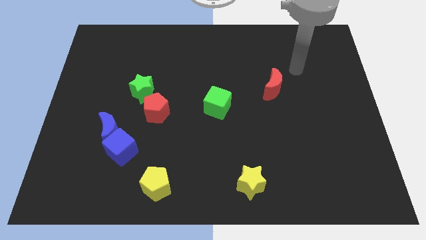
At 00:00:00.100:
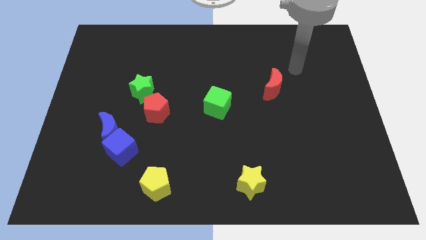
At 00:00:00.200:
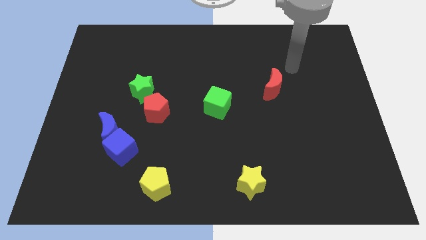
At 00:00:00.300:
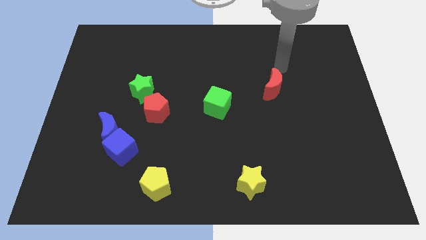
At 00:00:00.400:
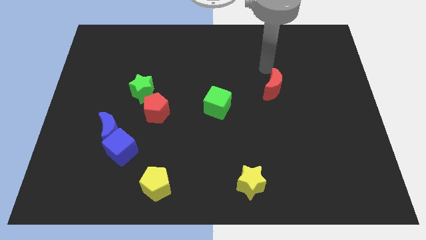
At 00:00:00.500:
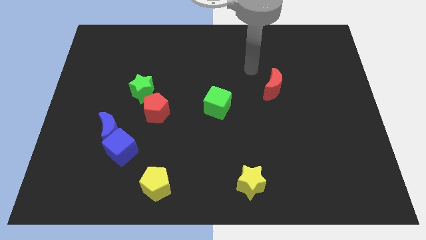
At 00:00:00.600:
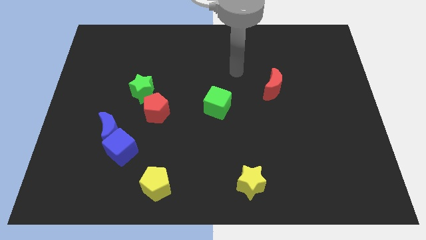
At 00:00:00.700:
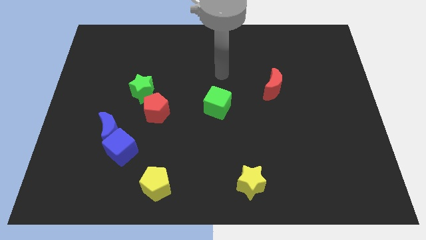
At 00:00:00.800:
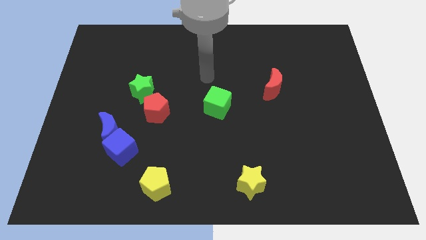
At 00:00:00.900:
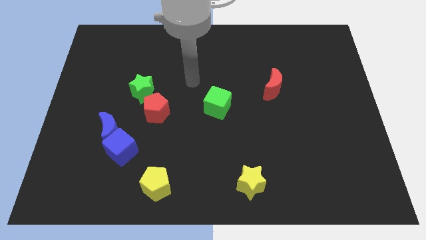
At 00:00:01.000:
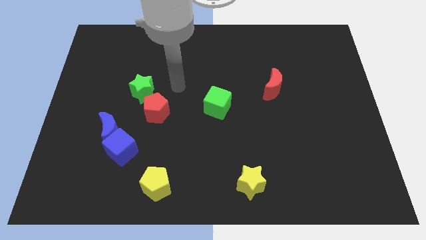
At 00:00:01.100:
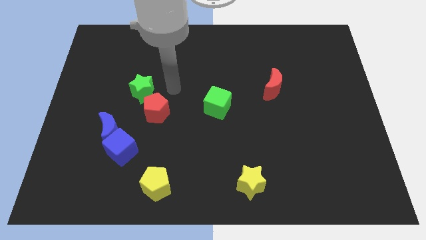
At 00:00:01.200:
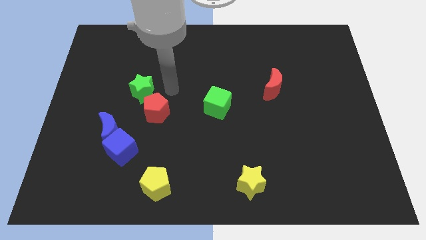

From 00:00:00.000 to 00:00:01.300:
move your hand towards center left

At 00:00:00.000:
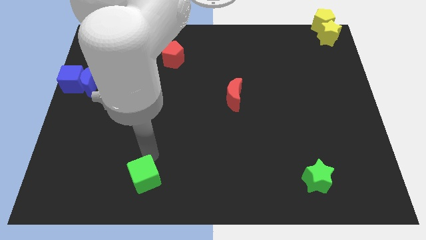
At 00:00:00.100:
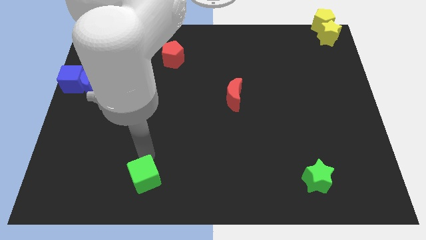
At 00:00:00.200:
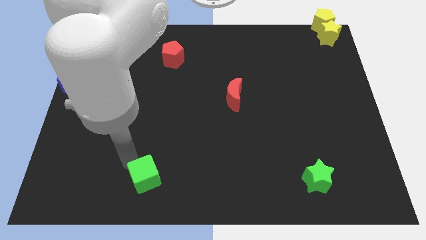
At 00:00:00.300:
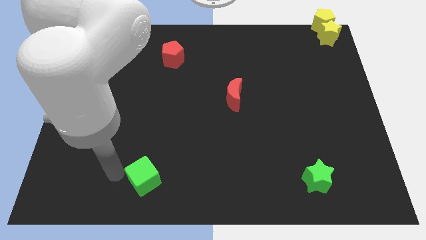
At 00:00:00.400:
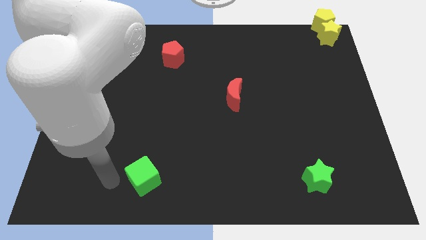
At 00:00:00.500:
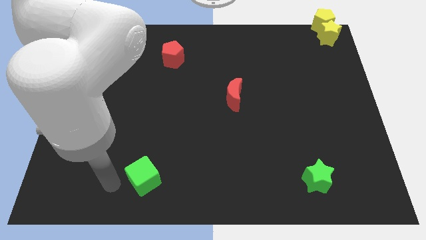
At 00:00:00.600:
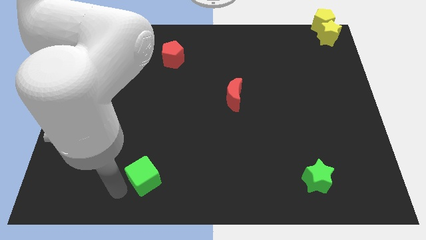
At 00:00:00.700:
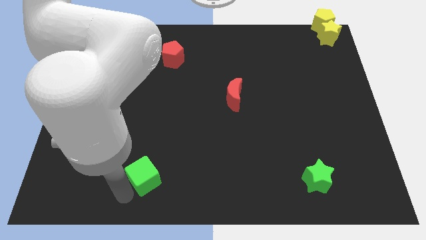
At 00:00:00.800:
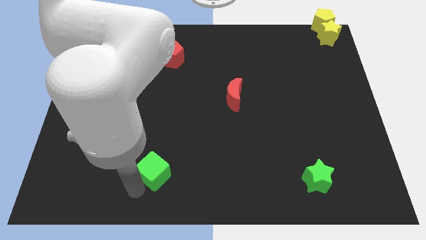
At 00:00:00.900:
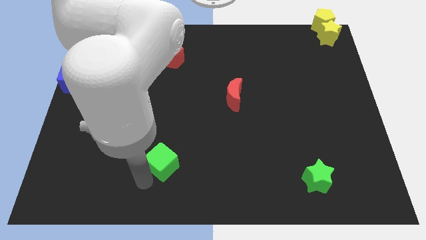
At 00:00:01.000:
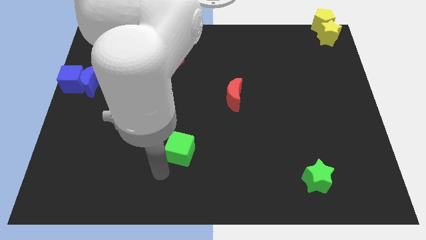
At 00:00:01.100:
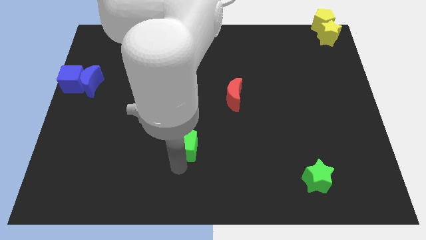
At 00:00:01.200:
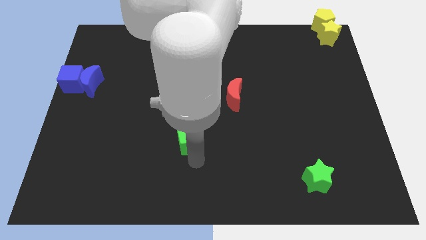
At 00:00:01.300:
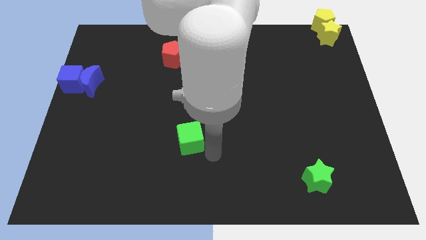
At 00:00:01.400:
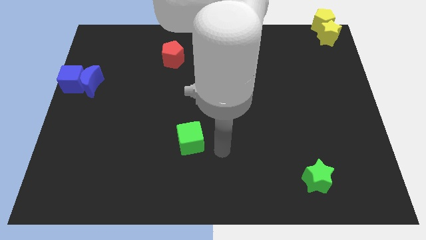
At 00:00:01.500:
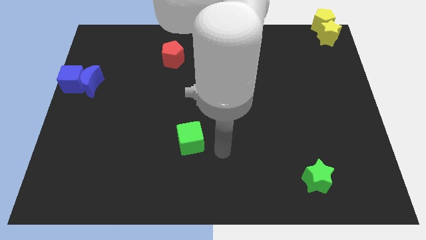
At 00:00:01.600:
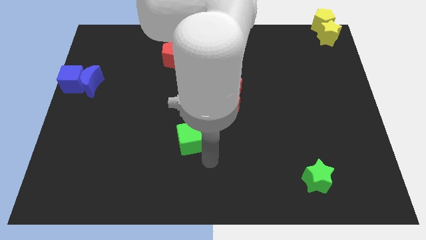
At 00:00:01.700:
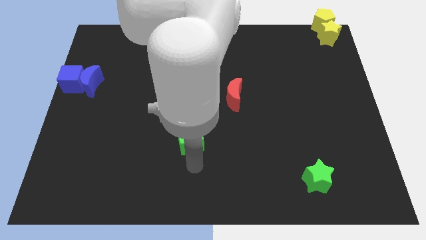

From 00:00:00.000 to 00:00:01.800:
move the green cube towards the center of the board

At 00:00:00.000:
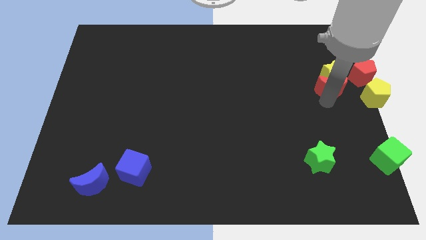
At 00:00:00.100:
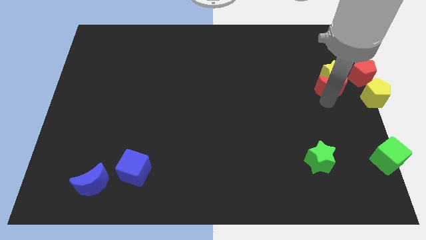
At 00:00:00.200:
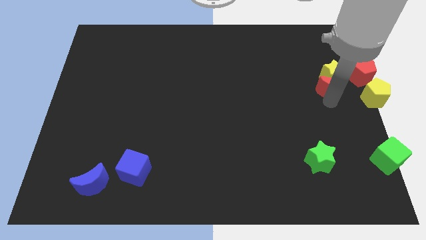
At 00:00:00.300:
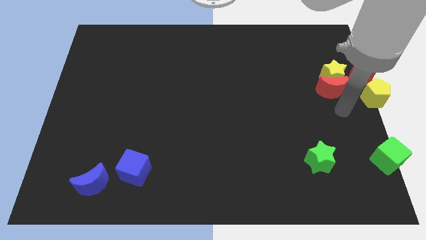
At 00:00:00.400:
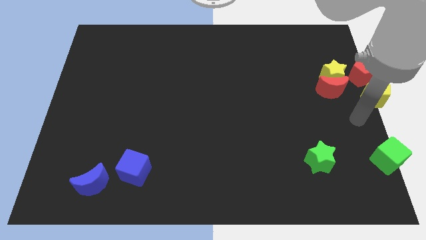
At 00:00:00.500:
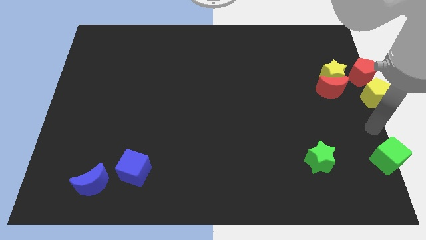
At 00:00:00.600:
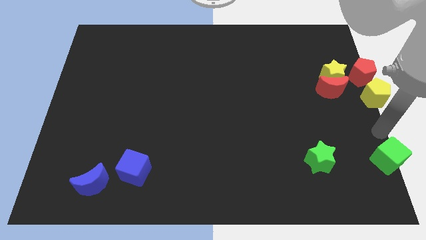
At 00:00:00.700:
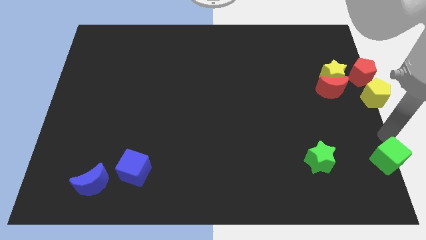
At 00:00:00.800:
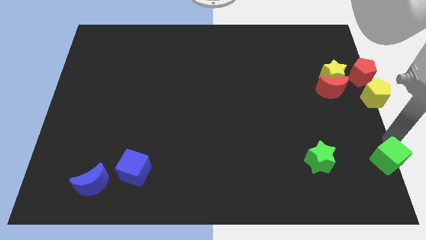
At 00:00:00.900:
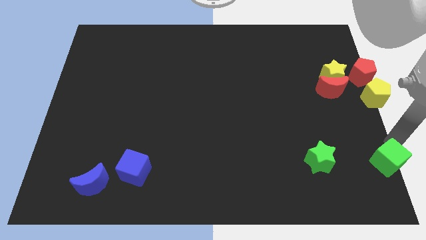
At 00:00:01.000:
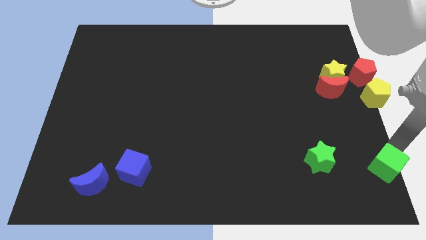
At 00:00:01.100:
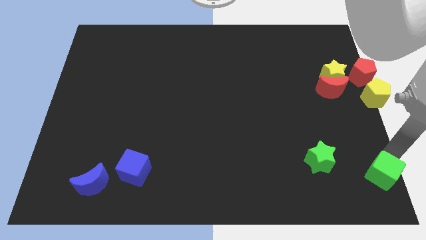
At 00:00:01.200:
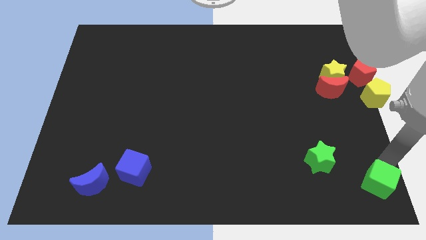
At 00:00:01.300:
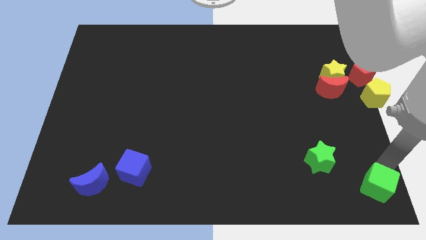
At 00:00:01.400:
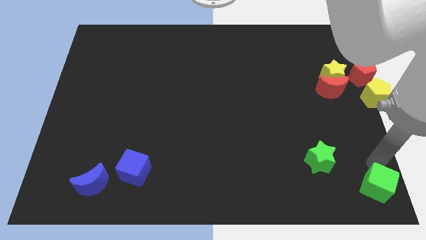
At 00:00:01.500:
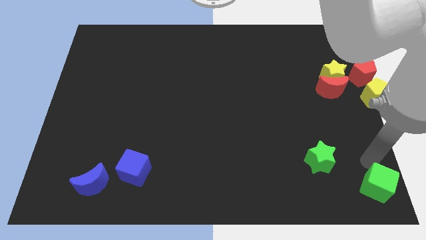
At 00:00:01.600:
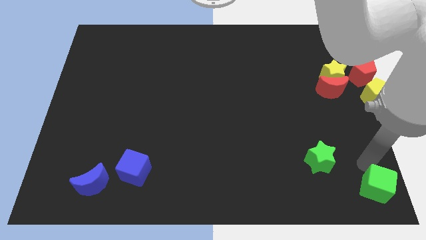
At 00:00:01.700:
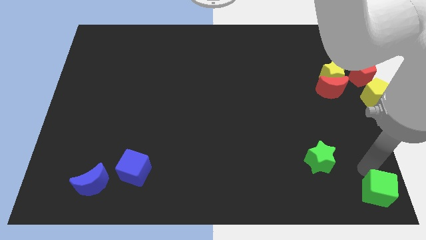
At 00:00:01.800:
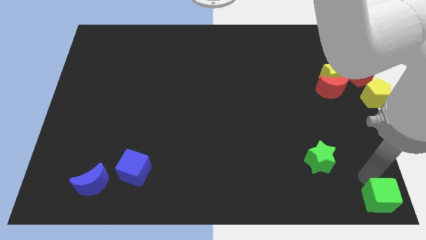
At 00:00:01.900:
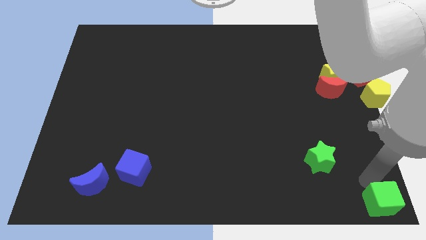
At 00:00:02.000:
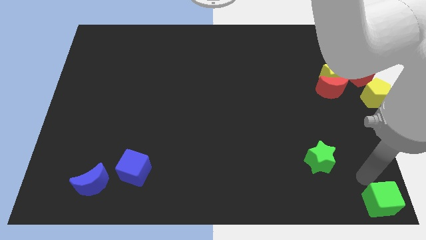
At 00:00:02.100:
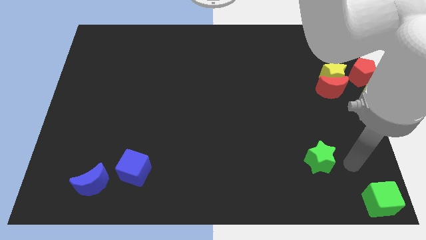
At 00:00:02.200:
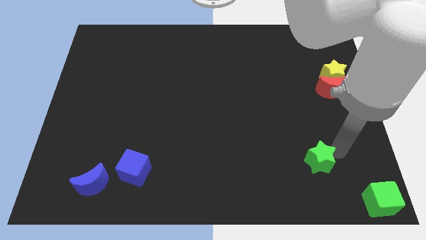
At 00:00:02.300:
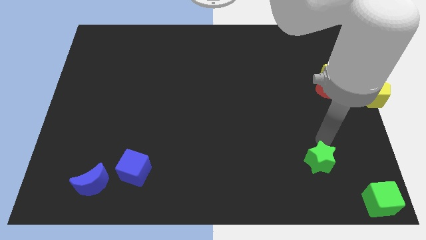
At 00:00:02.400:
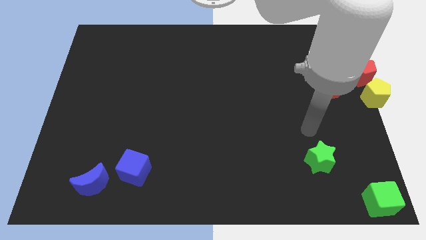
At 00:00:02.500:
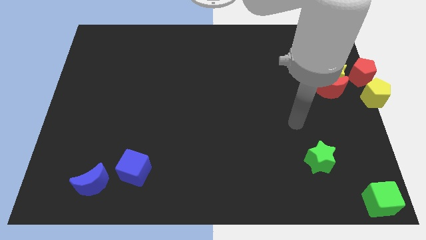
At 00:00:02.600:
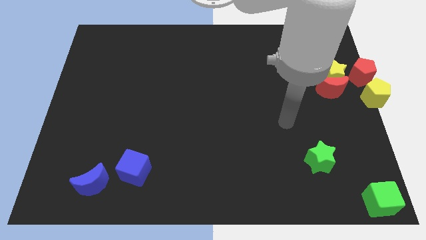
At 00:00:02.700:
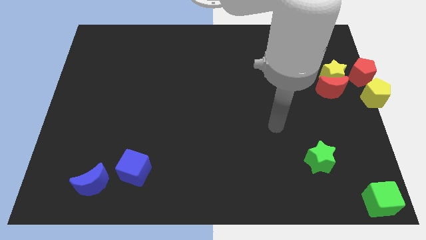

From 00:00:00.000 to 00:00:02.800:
push green cube to the bottom right corner

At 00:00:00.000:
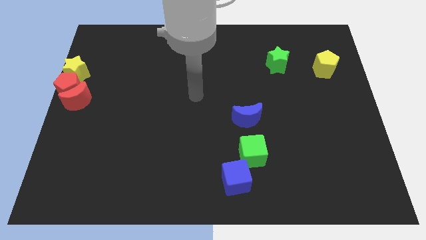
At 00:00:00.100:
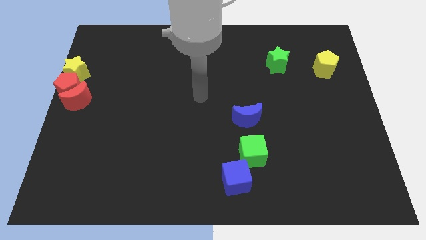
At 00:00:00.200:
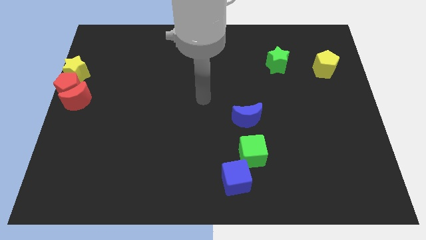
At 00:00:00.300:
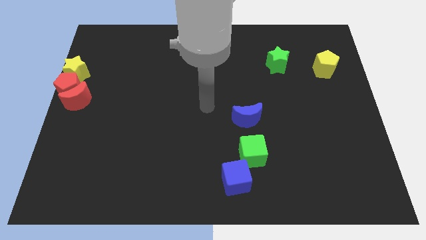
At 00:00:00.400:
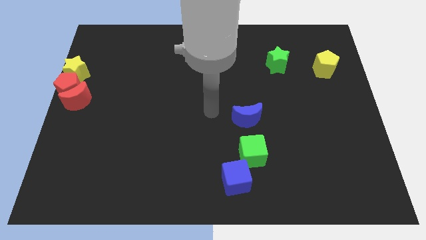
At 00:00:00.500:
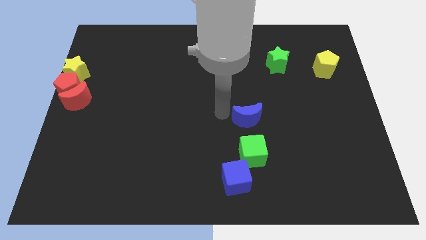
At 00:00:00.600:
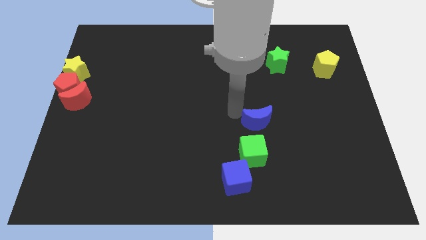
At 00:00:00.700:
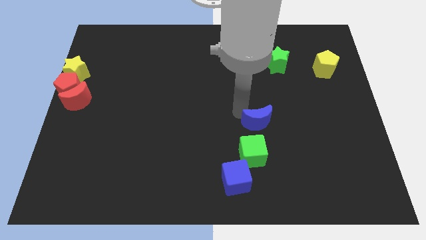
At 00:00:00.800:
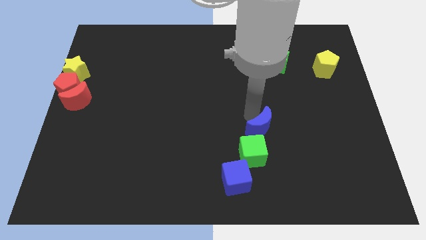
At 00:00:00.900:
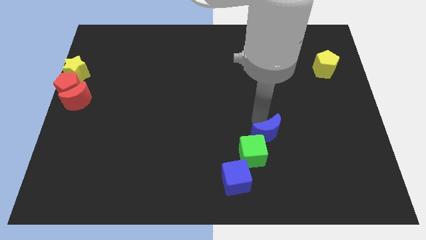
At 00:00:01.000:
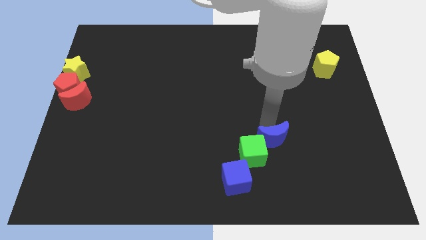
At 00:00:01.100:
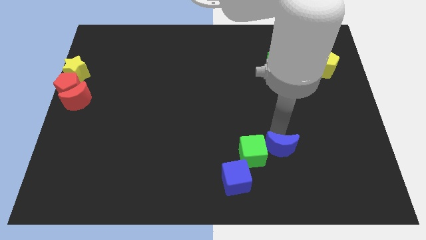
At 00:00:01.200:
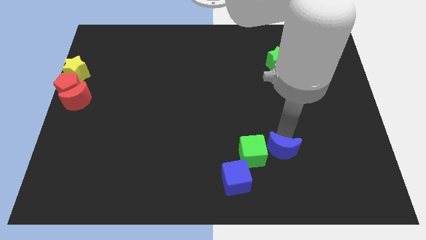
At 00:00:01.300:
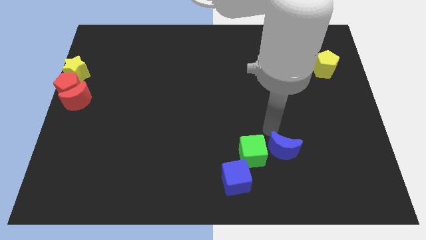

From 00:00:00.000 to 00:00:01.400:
drag the blue moon to the right of the green cube

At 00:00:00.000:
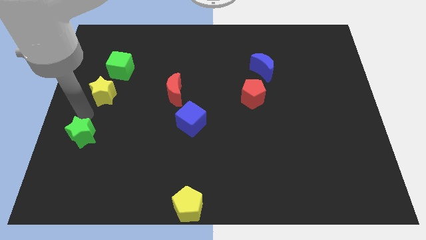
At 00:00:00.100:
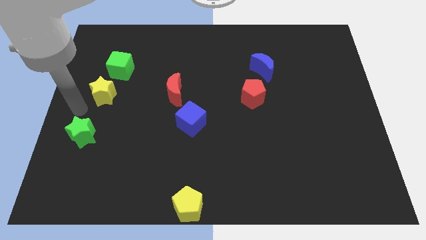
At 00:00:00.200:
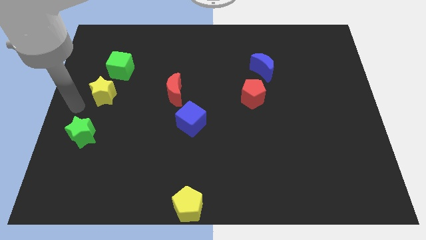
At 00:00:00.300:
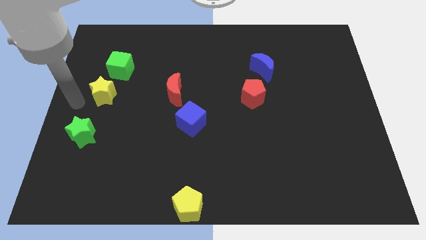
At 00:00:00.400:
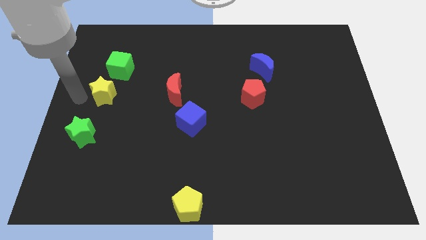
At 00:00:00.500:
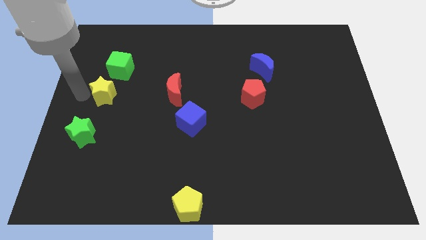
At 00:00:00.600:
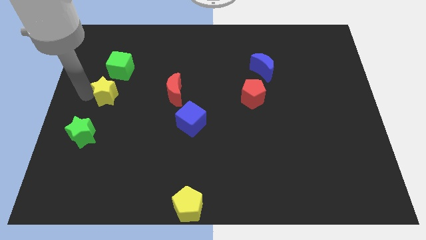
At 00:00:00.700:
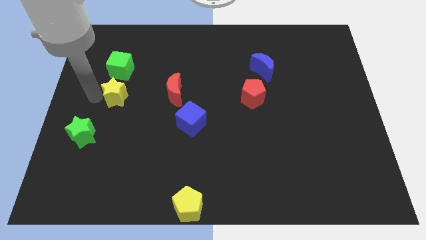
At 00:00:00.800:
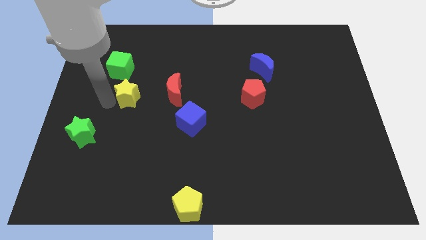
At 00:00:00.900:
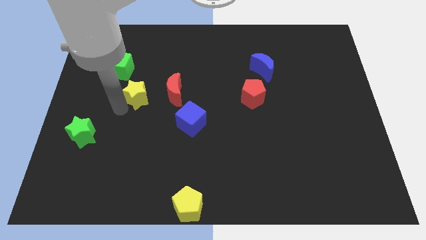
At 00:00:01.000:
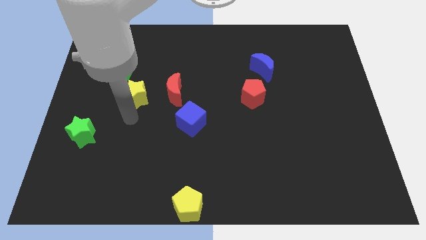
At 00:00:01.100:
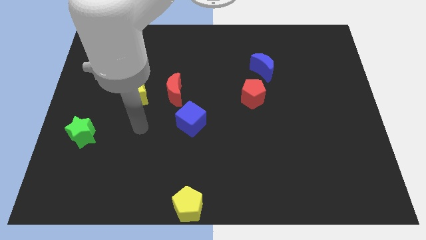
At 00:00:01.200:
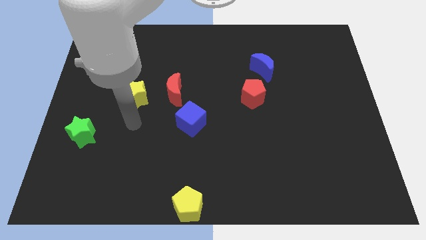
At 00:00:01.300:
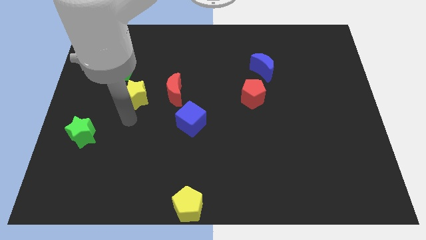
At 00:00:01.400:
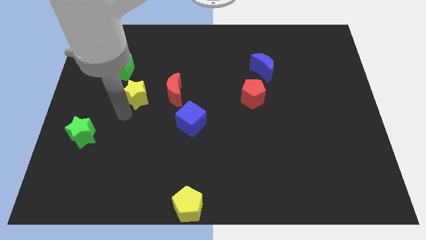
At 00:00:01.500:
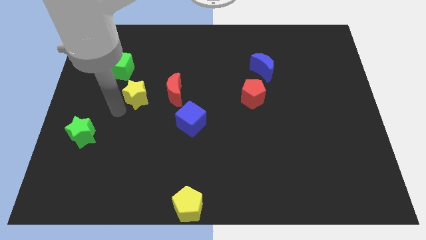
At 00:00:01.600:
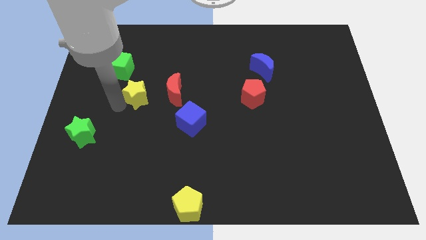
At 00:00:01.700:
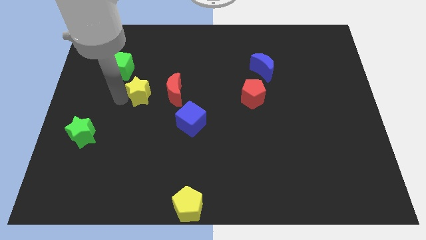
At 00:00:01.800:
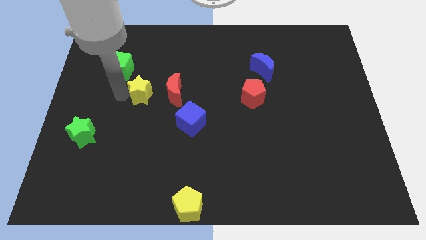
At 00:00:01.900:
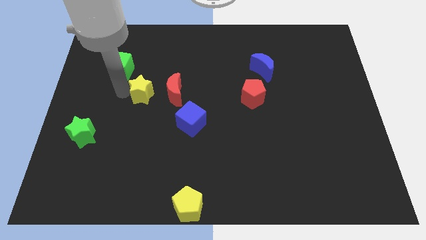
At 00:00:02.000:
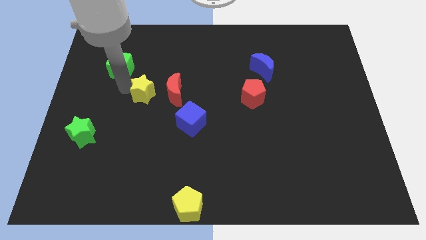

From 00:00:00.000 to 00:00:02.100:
slide the yellow star diagonally bottom right to the green cube
